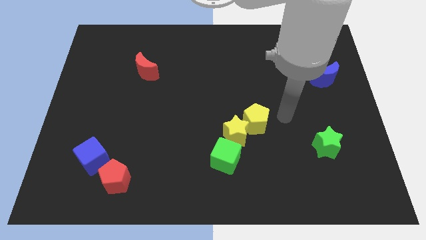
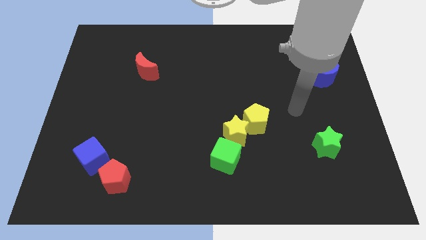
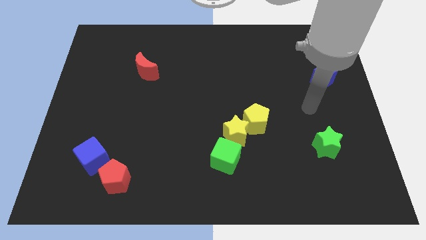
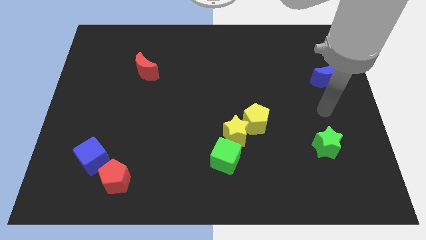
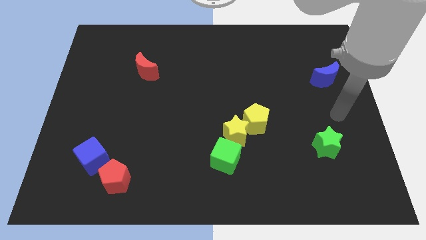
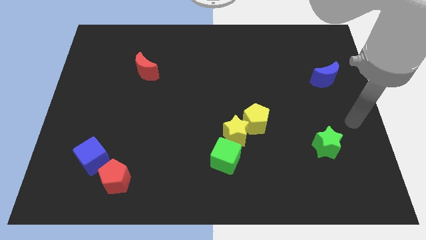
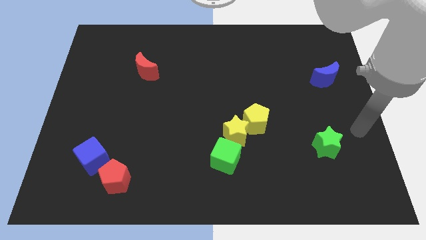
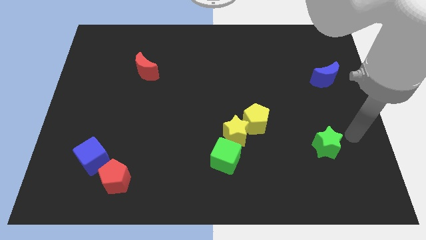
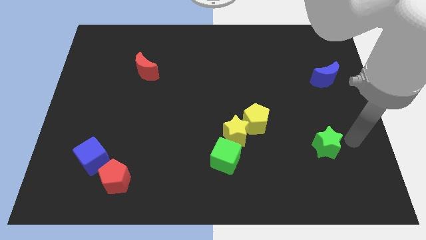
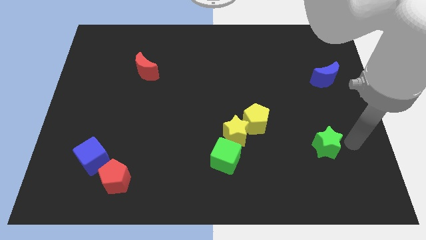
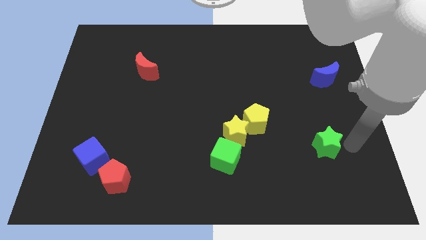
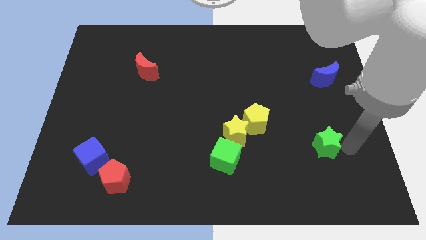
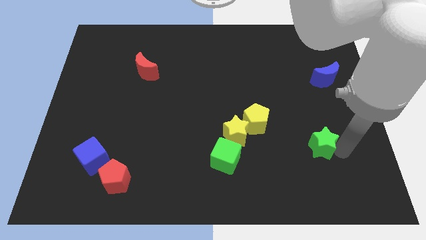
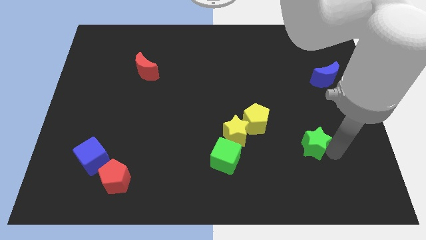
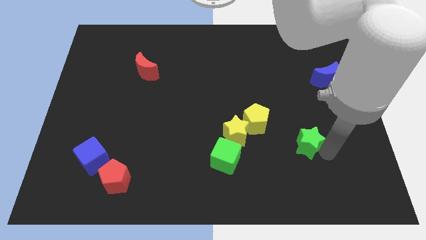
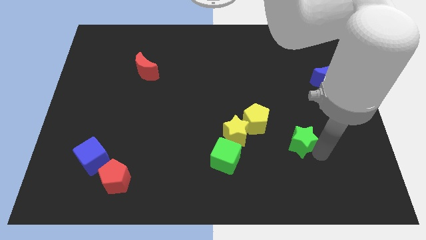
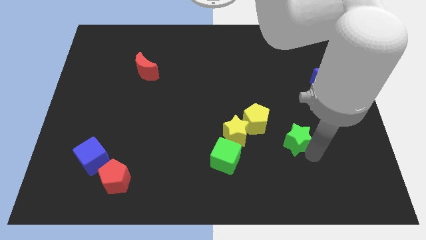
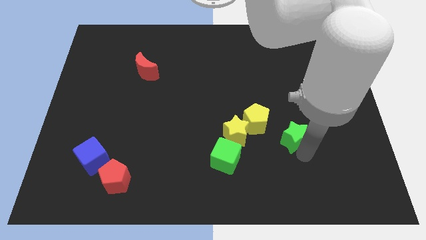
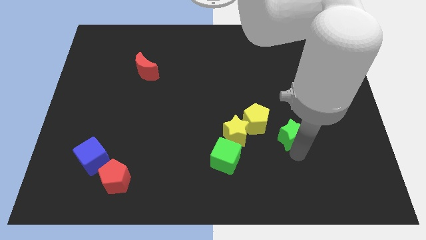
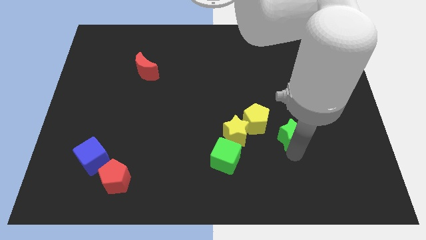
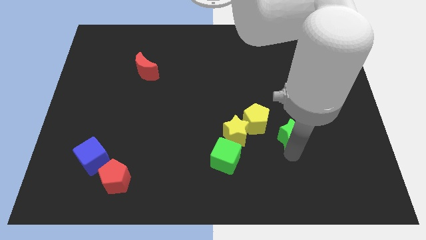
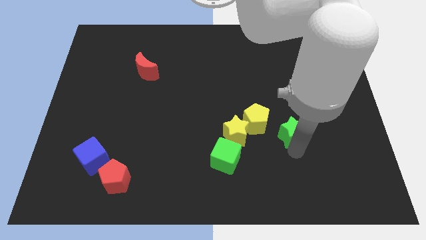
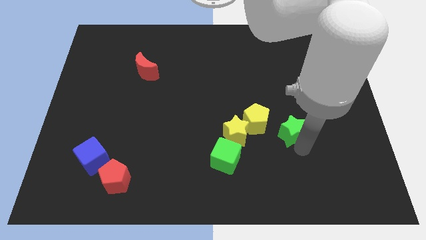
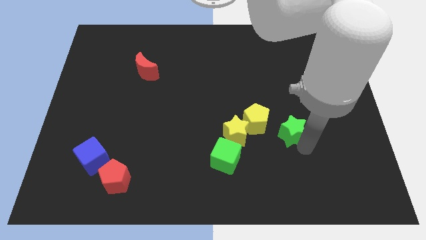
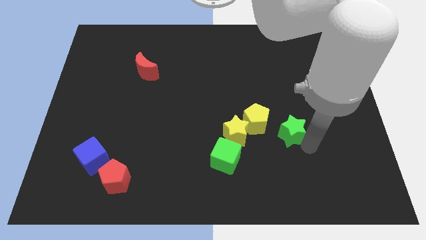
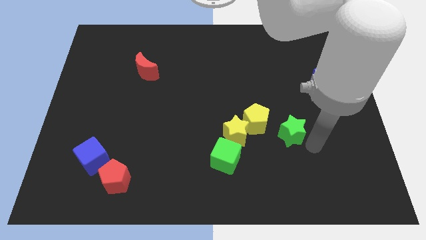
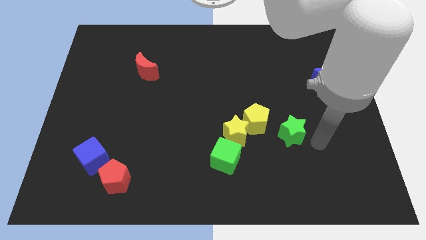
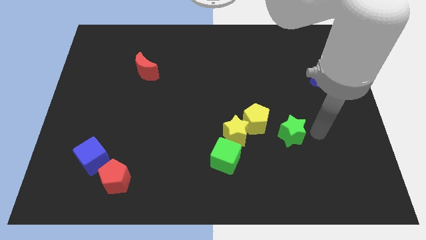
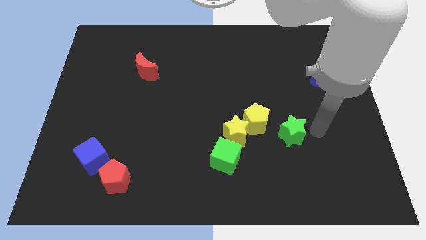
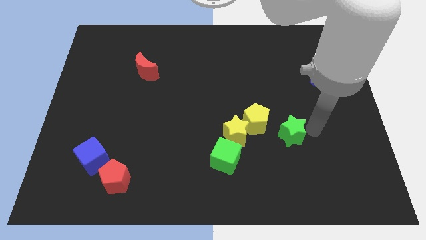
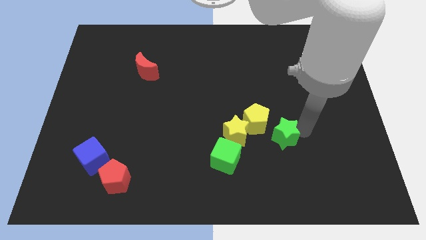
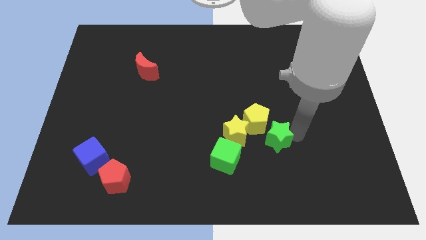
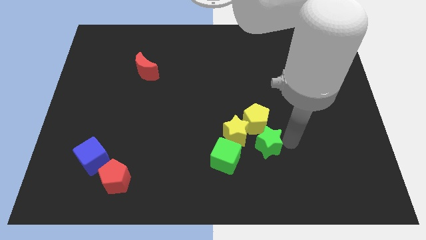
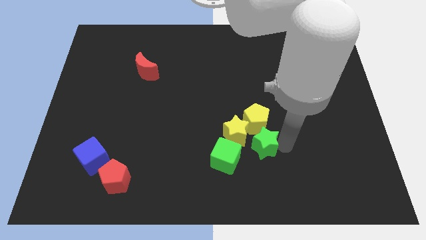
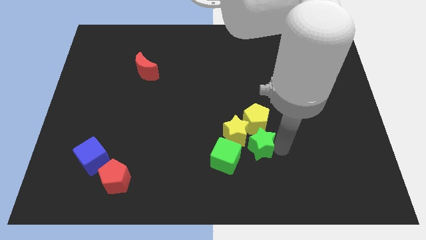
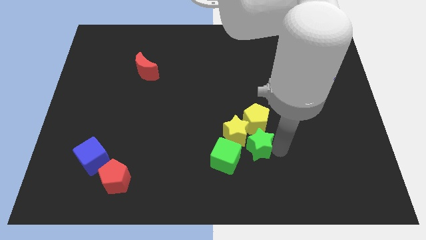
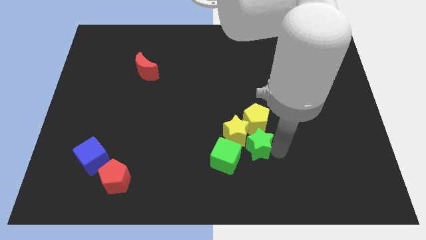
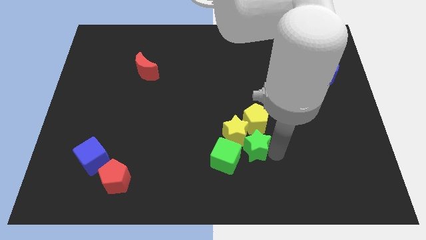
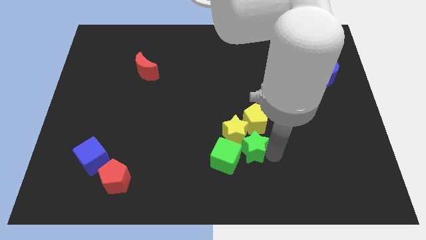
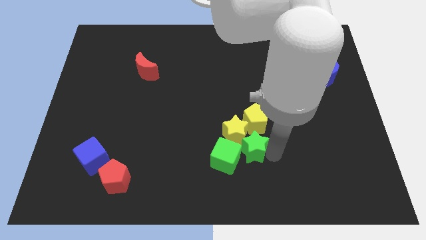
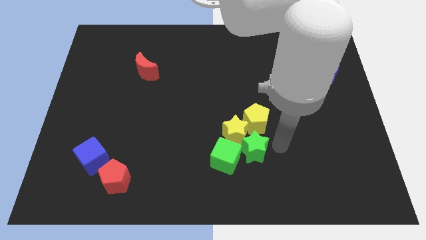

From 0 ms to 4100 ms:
make the green star to touch the yellow star

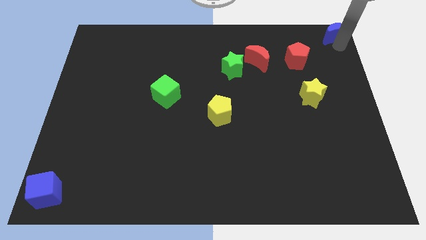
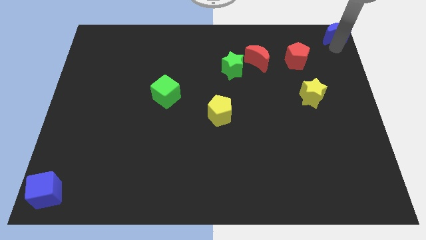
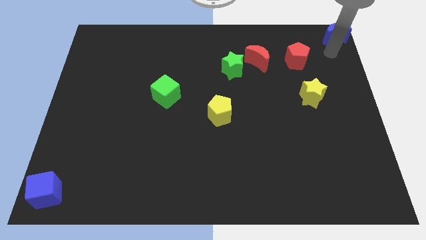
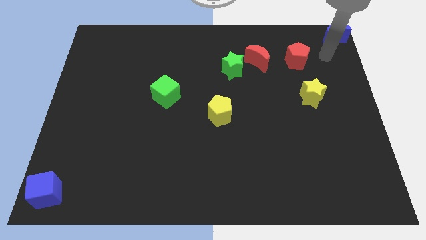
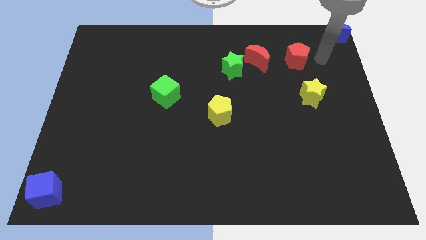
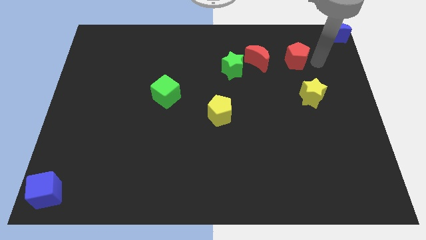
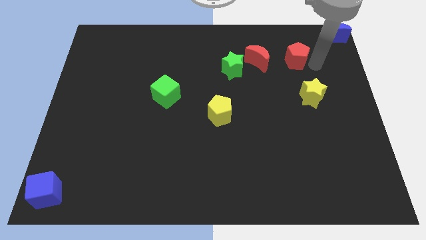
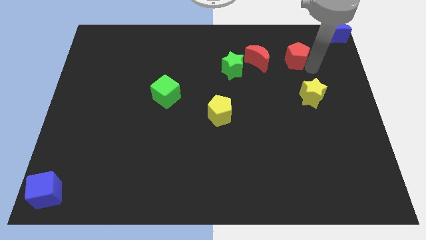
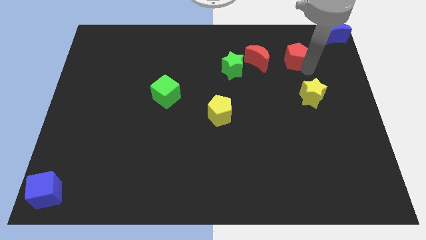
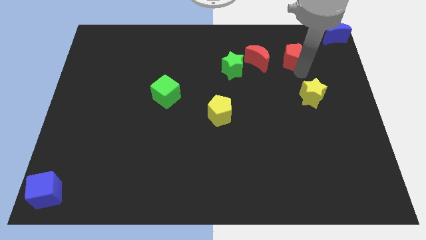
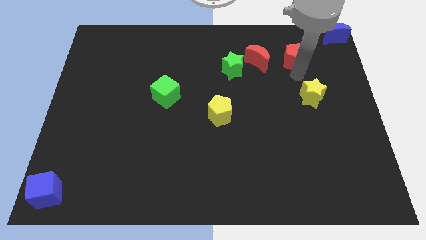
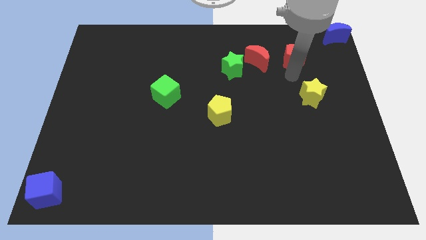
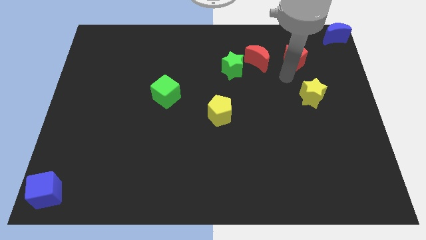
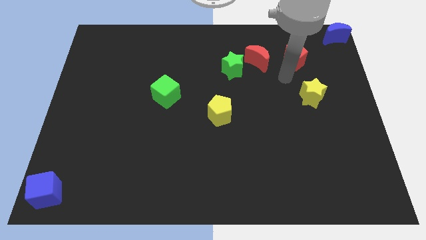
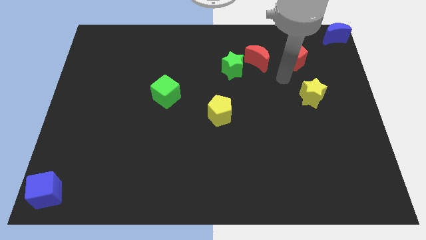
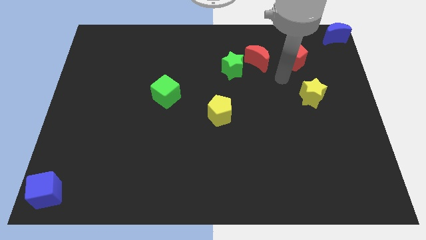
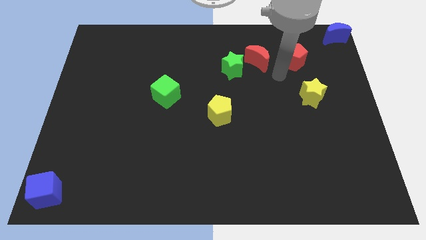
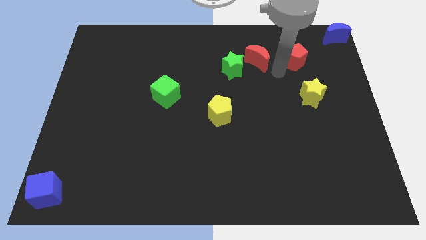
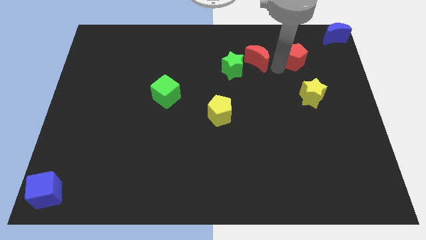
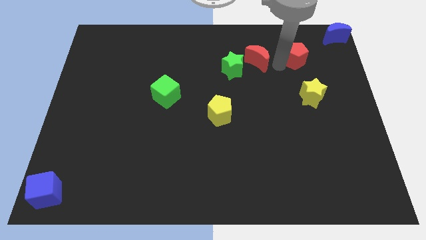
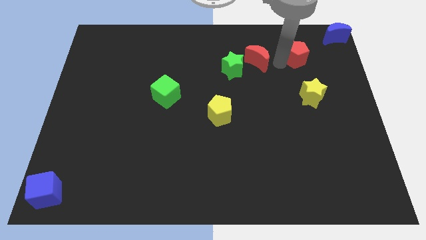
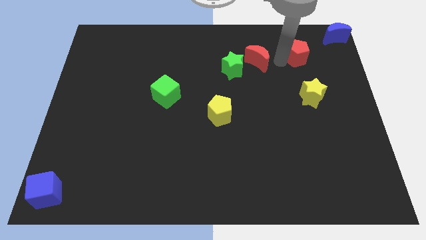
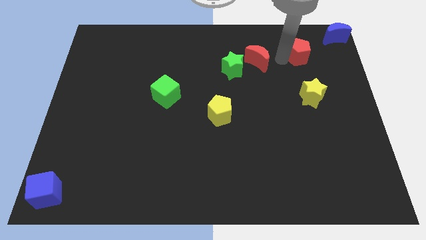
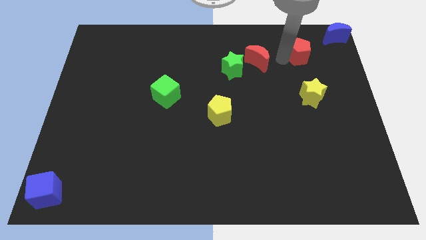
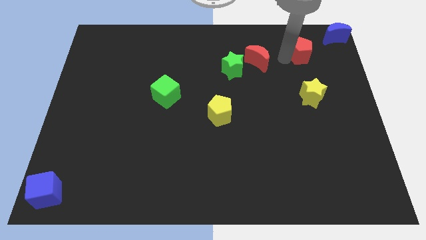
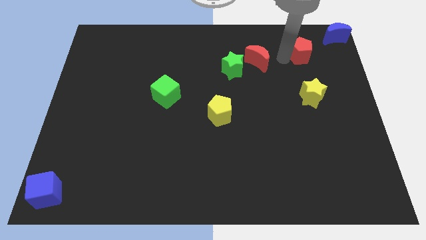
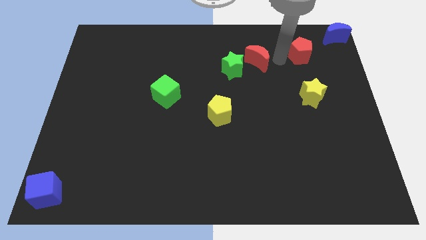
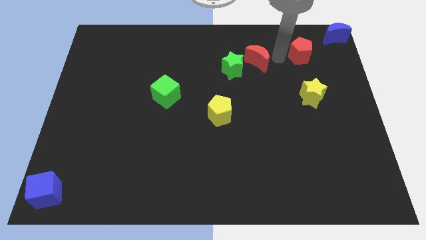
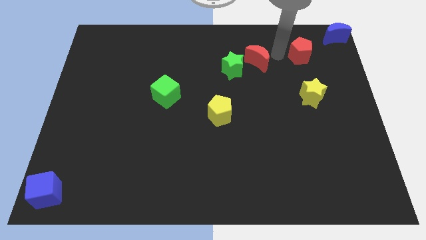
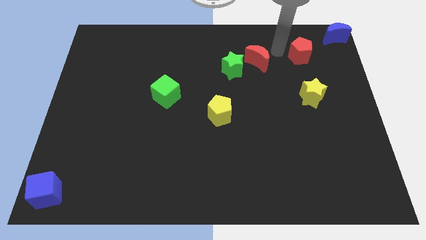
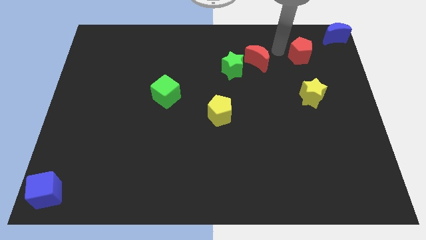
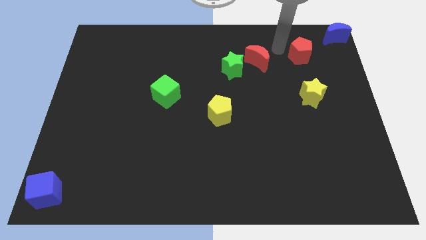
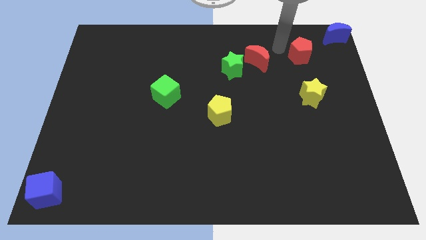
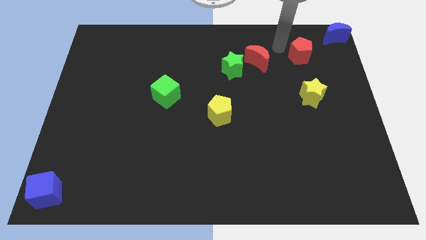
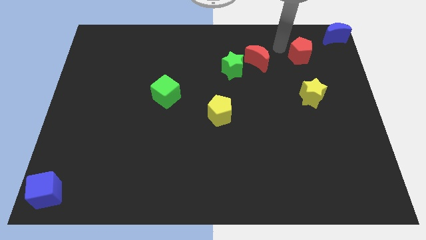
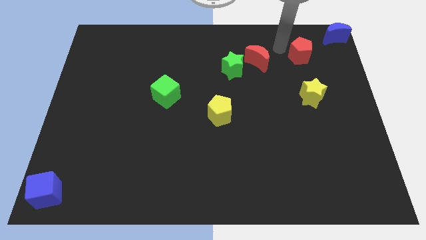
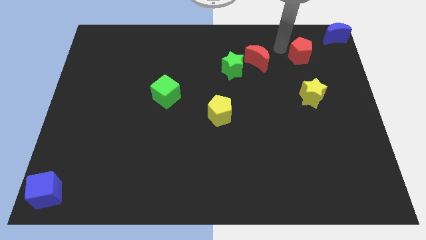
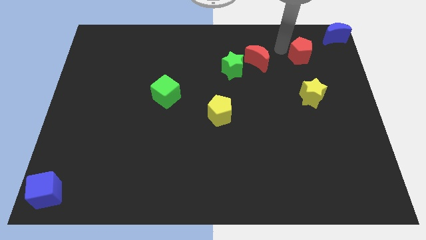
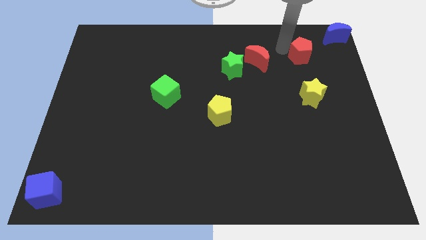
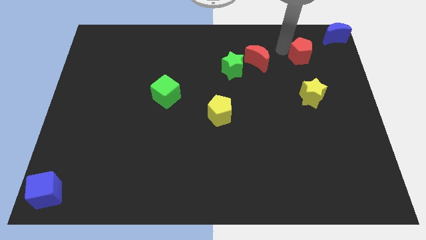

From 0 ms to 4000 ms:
slide the red pentagon towards the blue moon

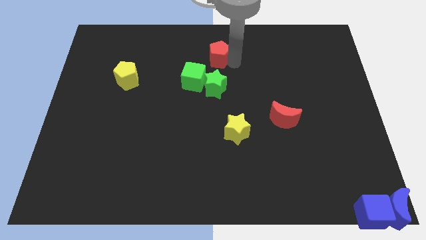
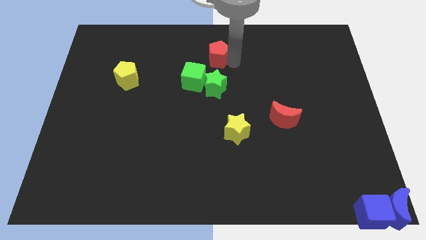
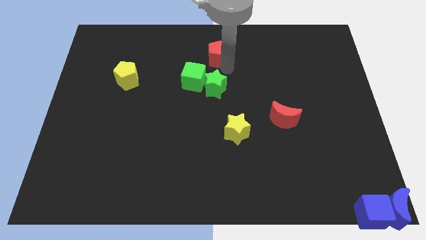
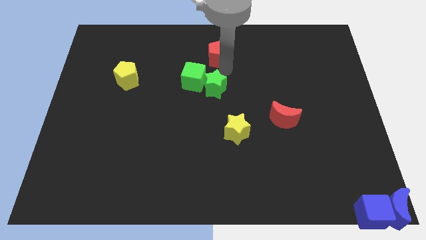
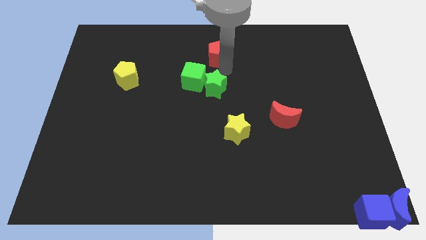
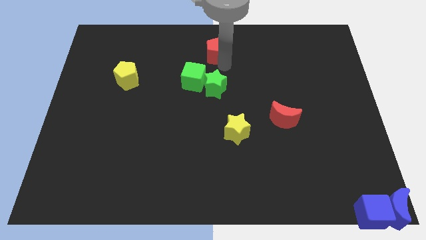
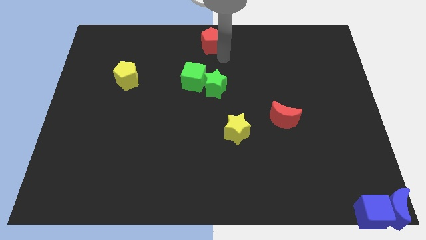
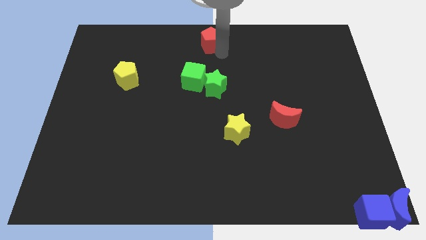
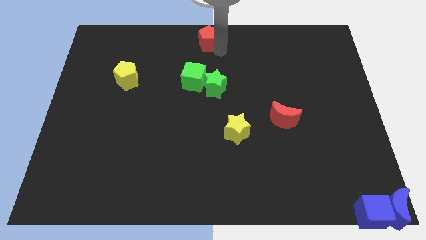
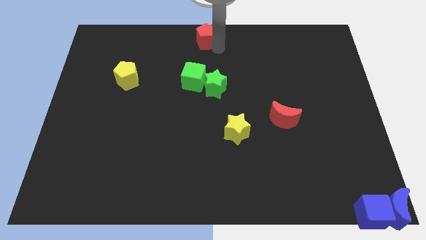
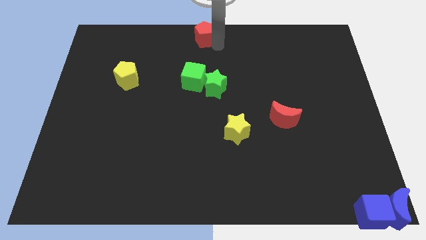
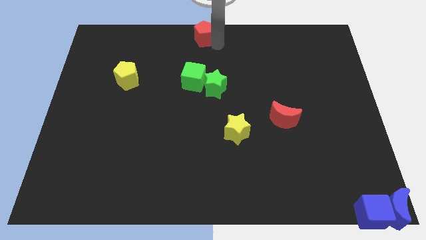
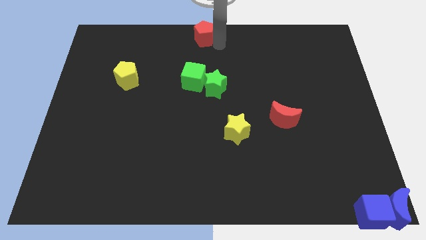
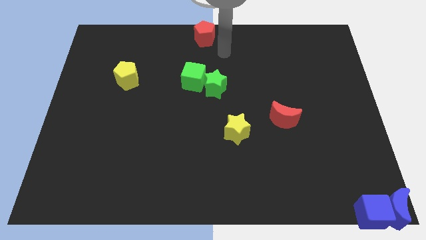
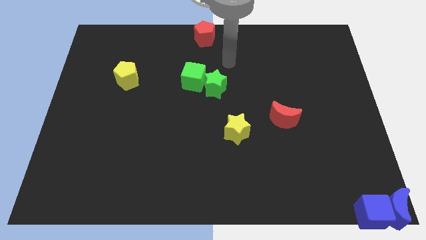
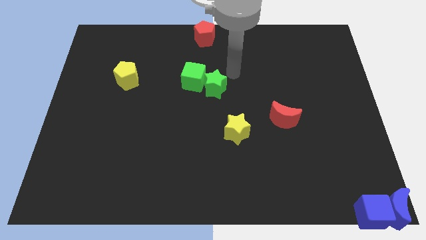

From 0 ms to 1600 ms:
place the red pentagon at the top center of the board
